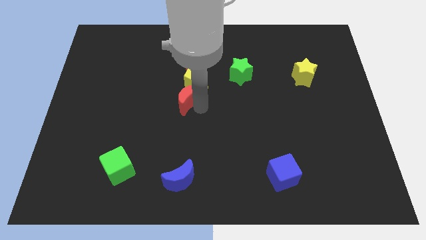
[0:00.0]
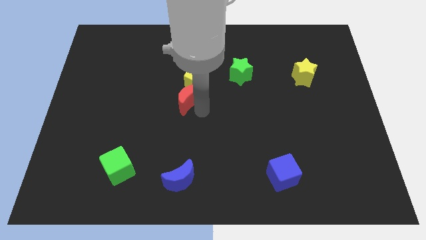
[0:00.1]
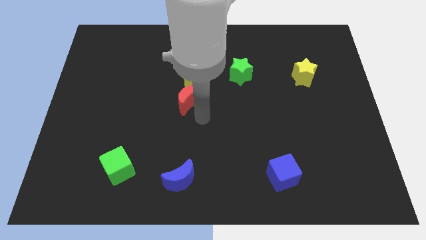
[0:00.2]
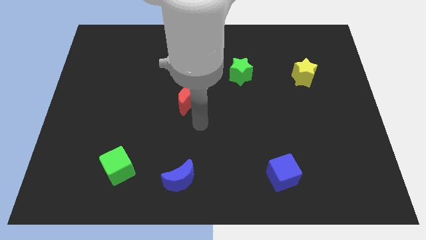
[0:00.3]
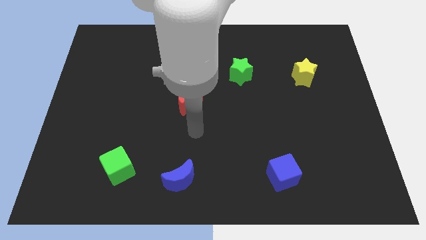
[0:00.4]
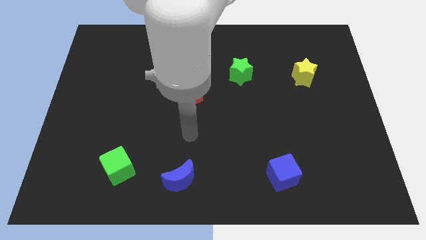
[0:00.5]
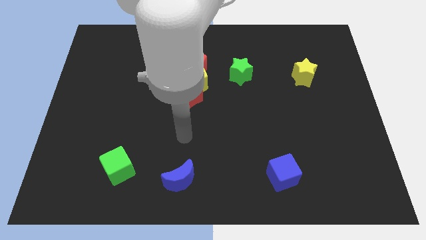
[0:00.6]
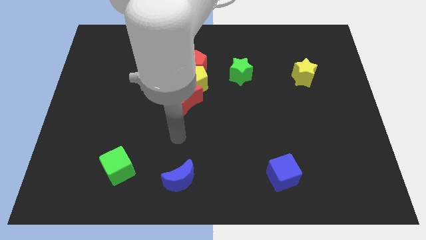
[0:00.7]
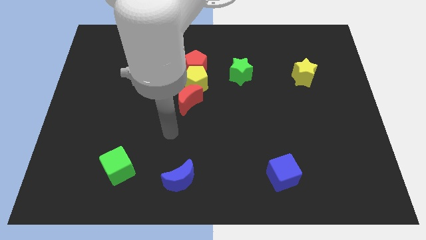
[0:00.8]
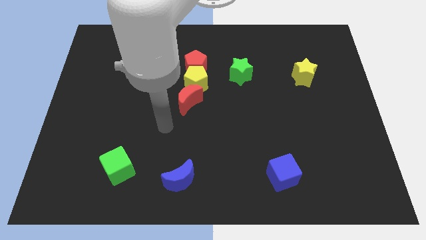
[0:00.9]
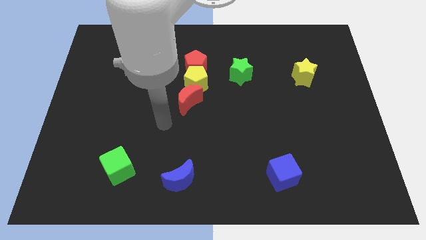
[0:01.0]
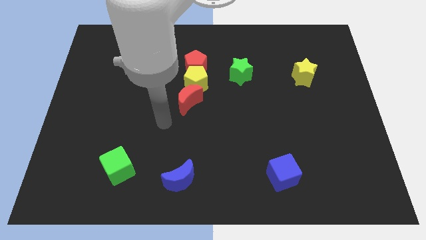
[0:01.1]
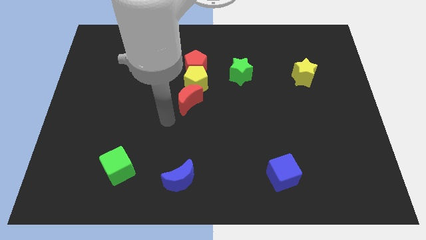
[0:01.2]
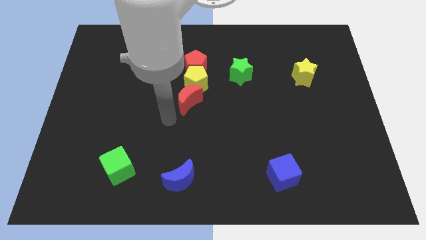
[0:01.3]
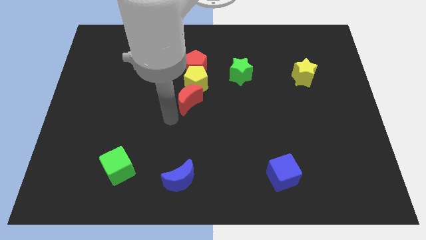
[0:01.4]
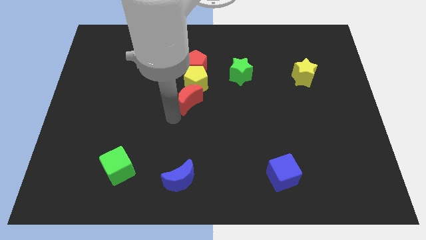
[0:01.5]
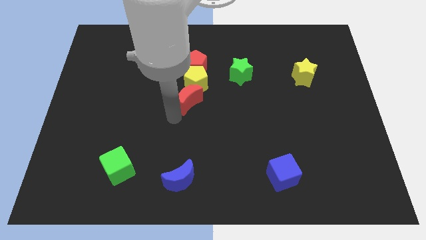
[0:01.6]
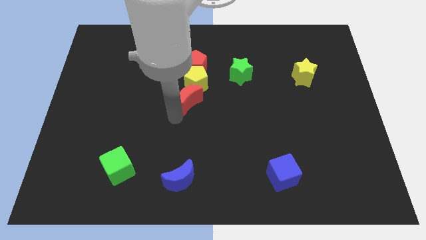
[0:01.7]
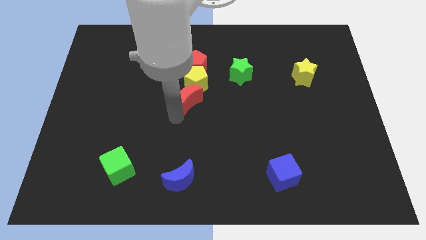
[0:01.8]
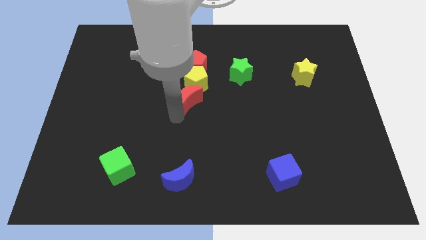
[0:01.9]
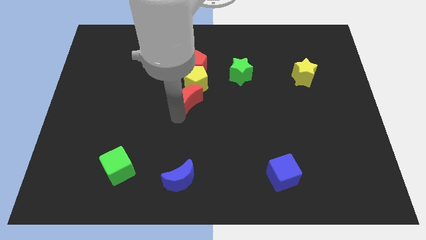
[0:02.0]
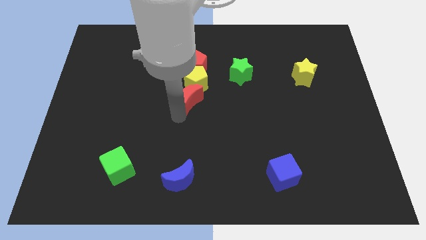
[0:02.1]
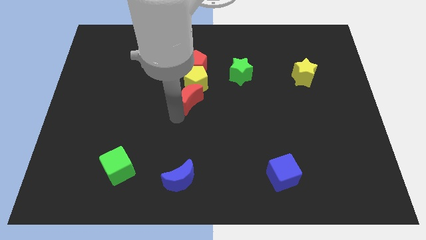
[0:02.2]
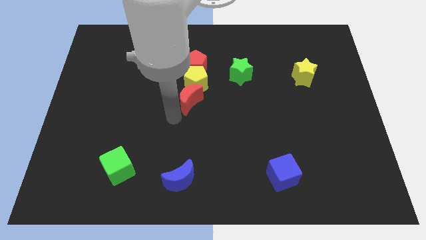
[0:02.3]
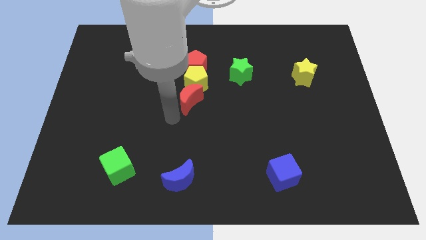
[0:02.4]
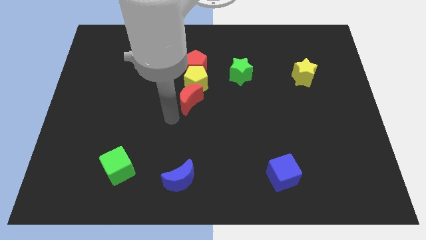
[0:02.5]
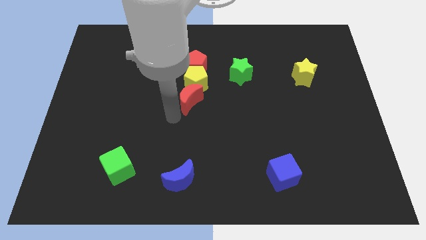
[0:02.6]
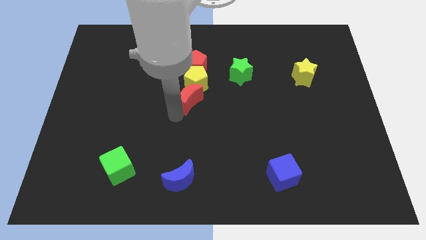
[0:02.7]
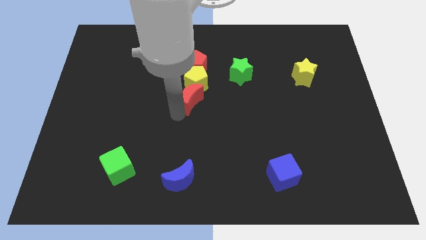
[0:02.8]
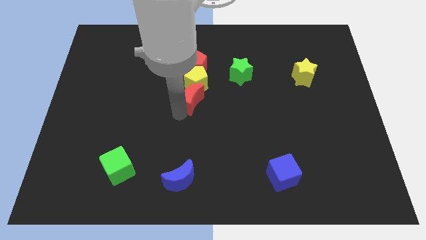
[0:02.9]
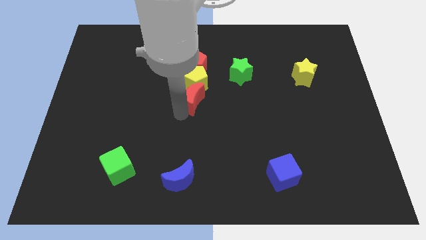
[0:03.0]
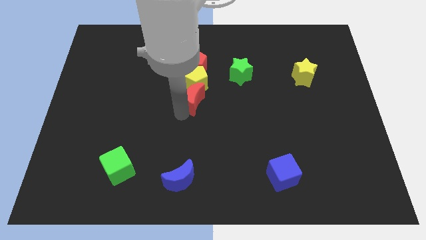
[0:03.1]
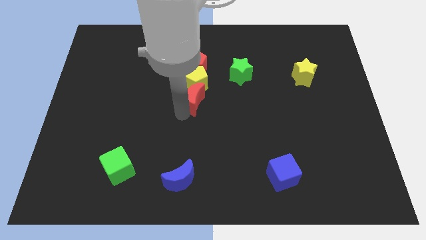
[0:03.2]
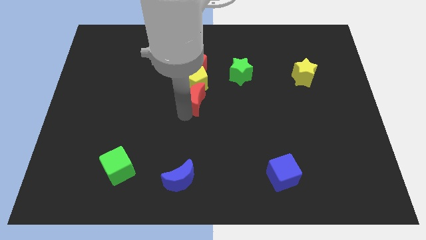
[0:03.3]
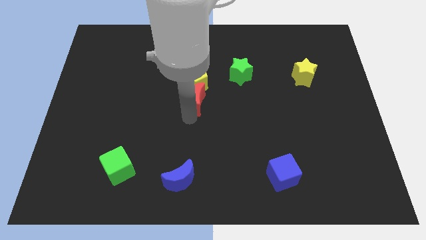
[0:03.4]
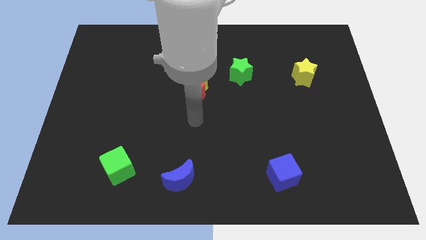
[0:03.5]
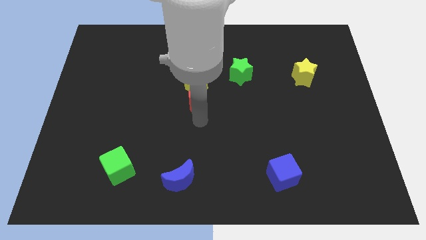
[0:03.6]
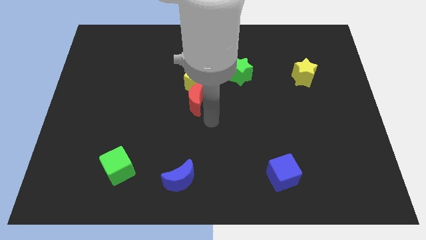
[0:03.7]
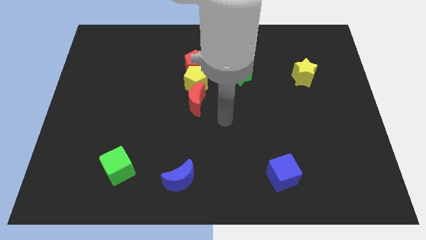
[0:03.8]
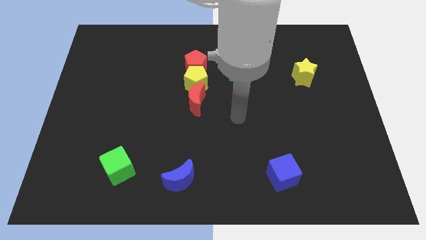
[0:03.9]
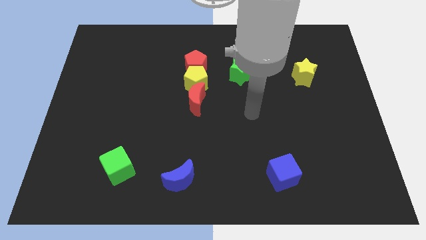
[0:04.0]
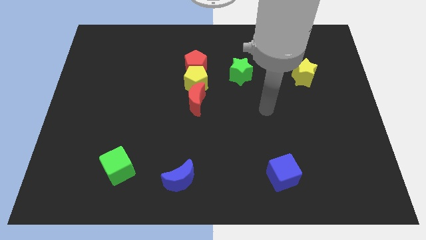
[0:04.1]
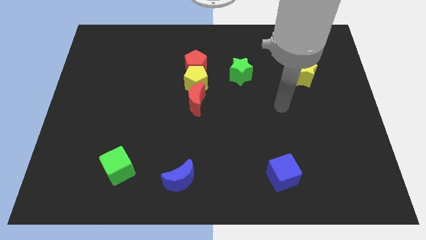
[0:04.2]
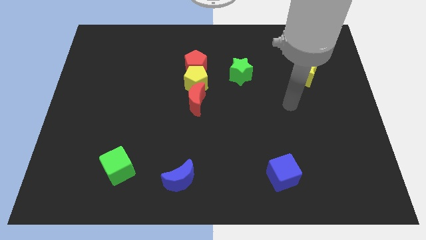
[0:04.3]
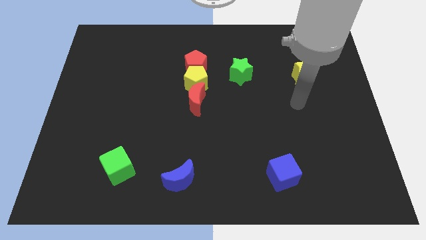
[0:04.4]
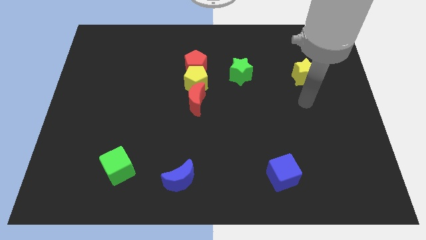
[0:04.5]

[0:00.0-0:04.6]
move the red crescent in a row

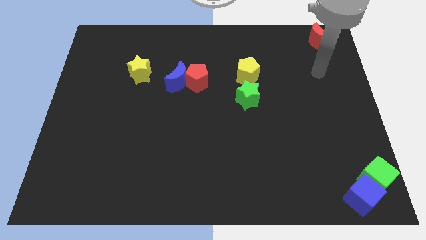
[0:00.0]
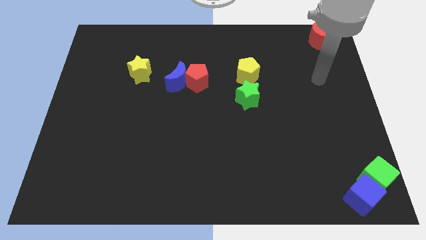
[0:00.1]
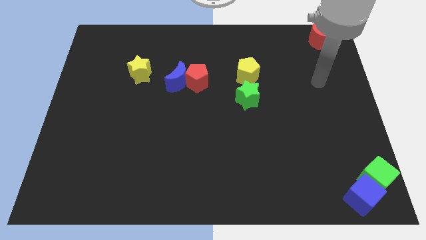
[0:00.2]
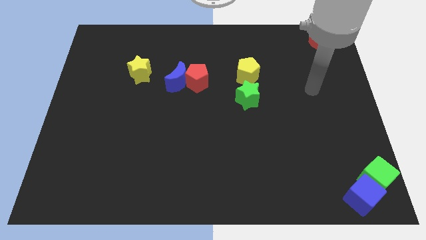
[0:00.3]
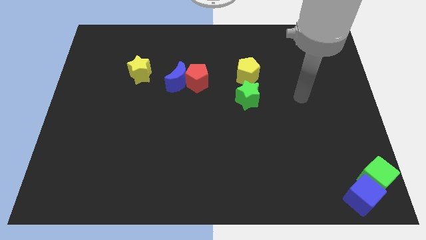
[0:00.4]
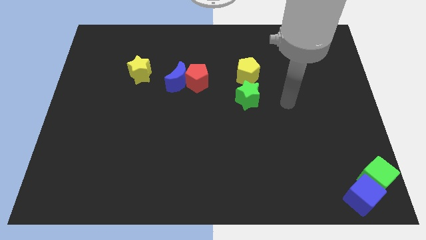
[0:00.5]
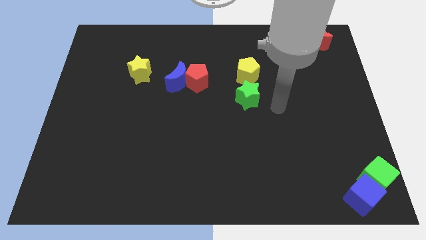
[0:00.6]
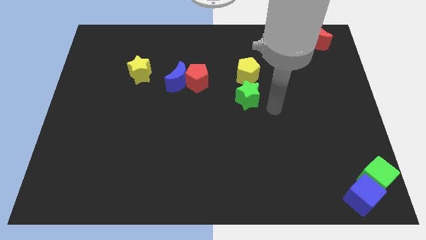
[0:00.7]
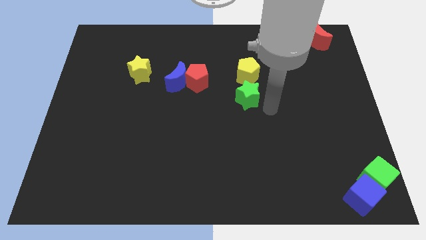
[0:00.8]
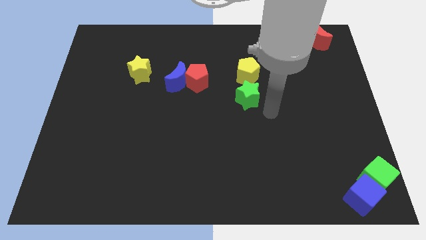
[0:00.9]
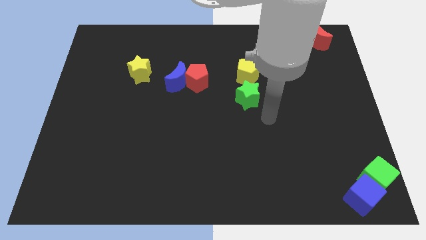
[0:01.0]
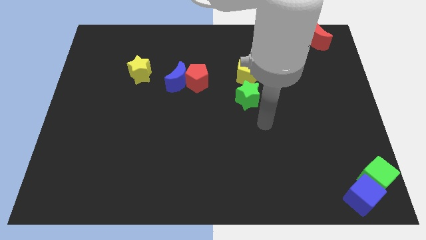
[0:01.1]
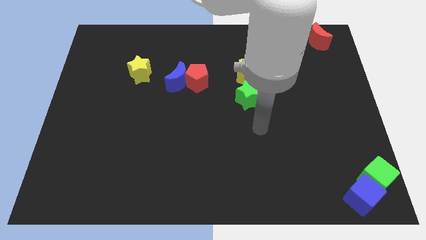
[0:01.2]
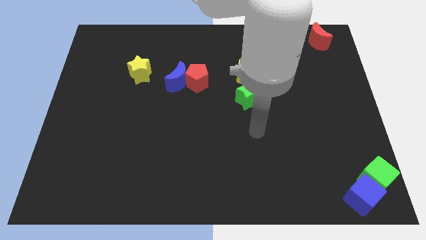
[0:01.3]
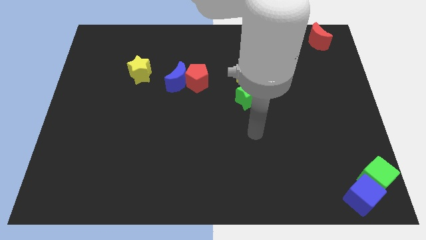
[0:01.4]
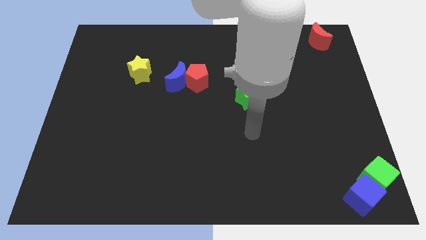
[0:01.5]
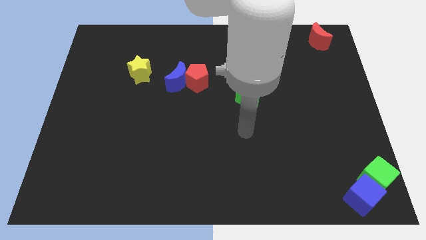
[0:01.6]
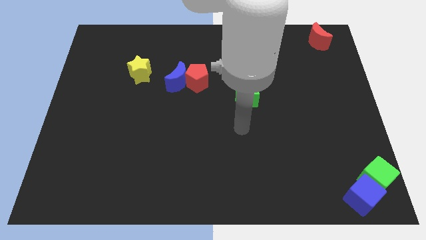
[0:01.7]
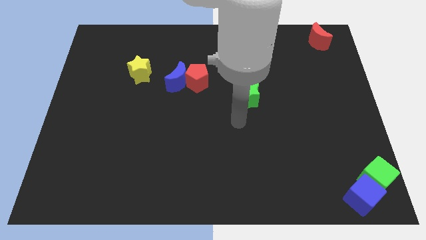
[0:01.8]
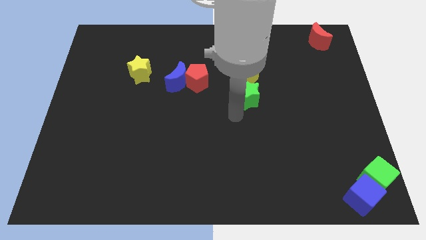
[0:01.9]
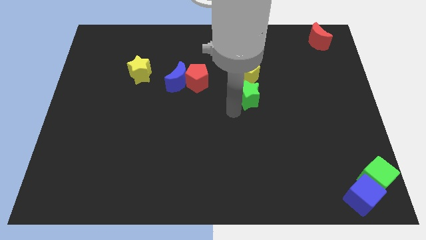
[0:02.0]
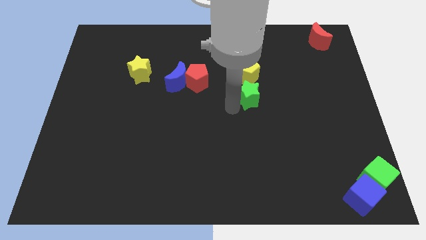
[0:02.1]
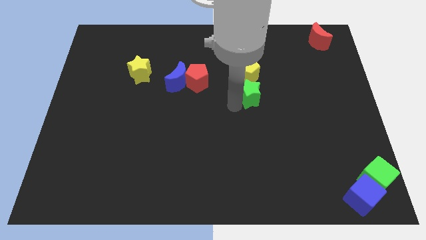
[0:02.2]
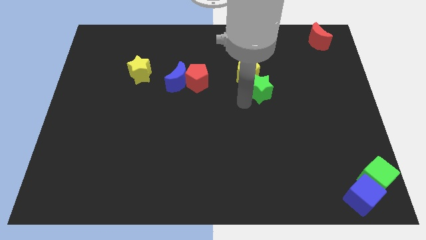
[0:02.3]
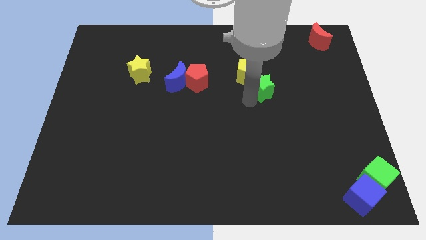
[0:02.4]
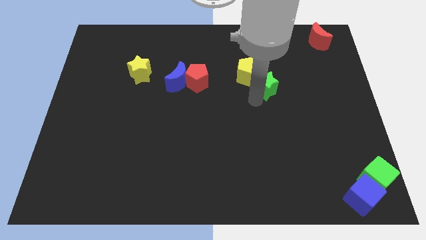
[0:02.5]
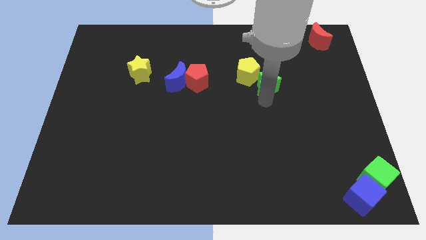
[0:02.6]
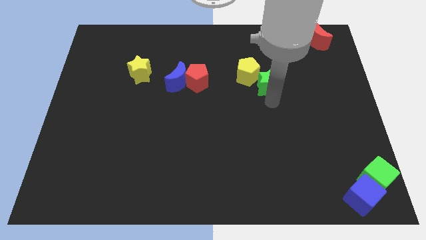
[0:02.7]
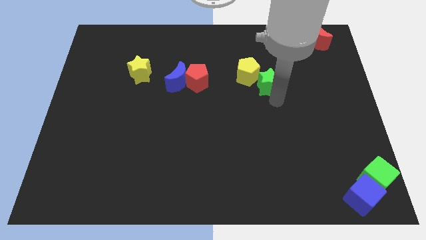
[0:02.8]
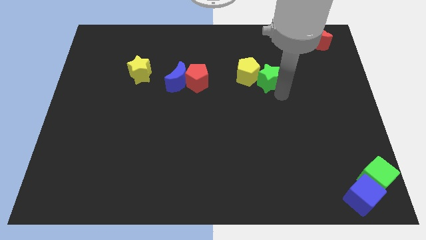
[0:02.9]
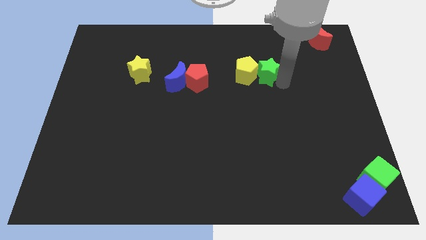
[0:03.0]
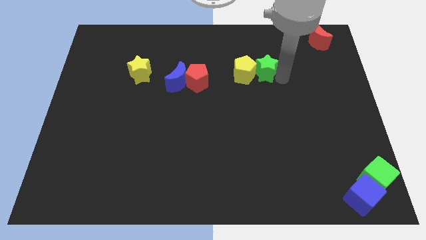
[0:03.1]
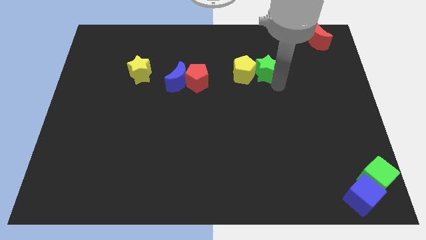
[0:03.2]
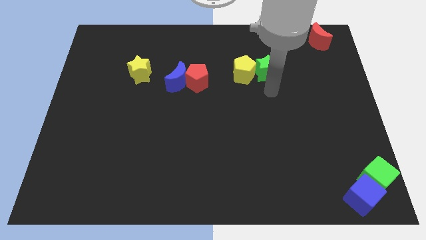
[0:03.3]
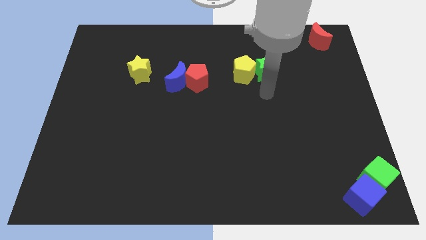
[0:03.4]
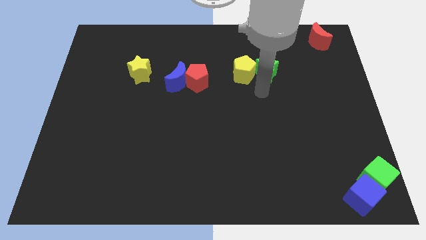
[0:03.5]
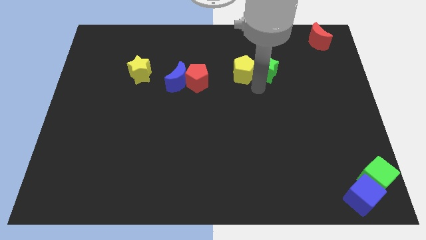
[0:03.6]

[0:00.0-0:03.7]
place the green star to the right side of the yellow pentagon

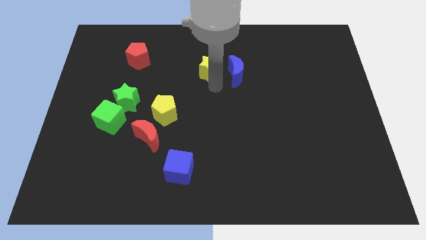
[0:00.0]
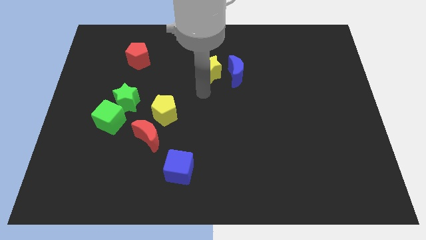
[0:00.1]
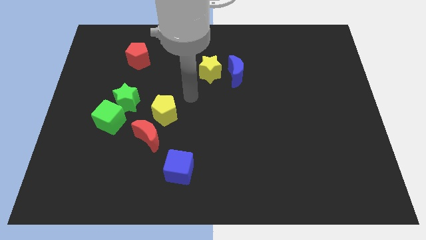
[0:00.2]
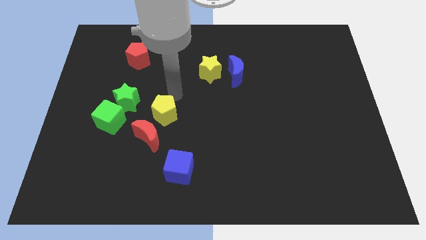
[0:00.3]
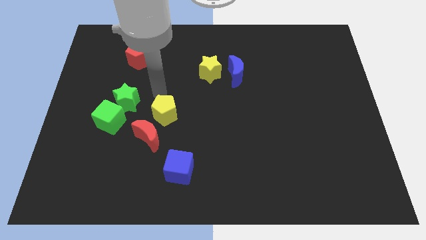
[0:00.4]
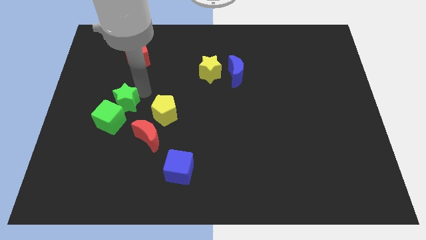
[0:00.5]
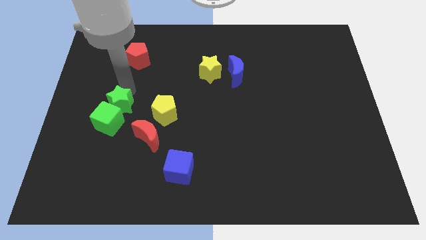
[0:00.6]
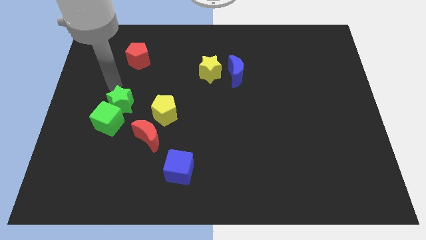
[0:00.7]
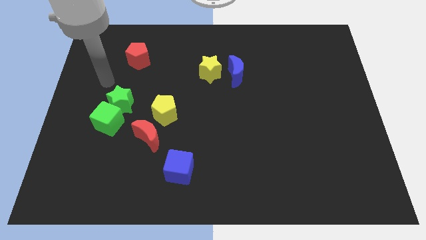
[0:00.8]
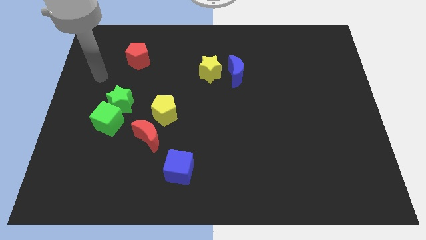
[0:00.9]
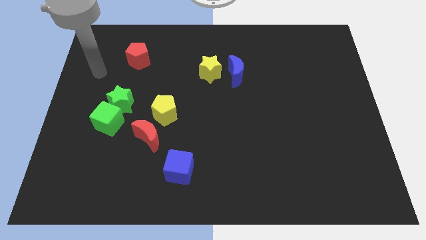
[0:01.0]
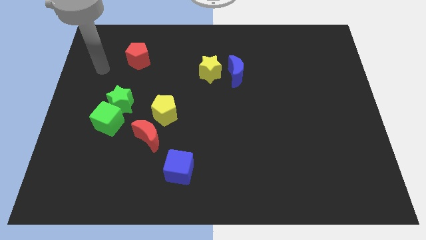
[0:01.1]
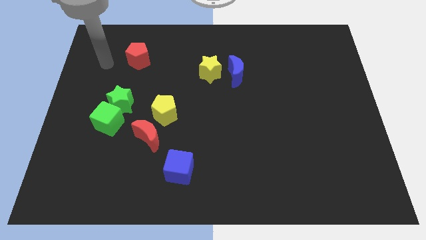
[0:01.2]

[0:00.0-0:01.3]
move arm away from yellow star
